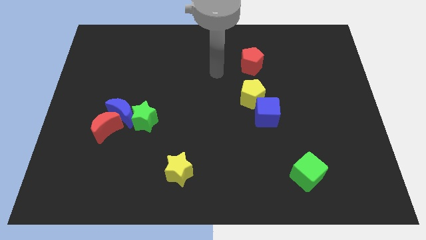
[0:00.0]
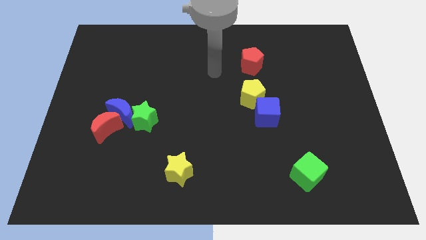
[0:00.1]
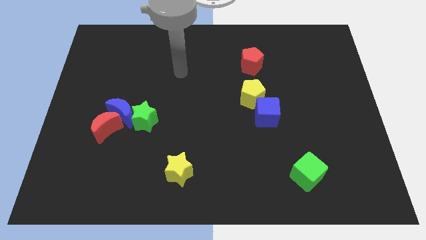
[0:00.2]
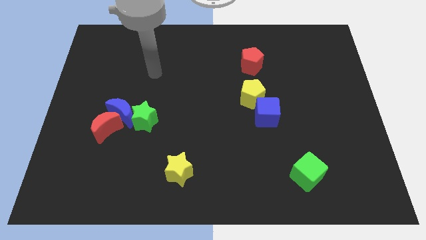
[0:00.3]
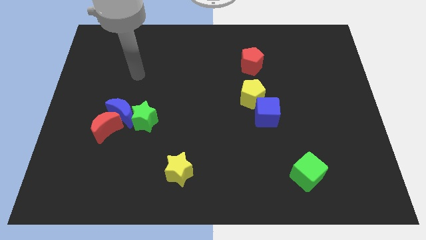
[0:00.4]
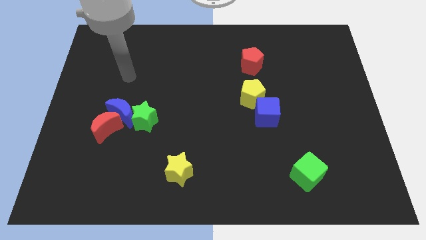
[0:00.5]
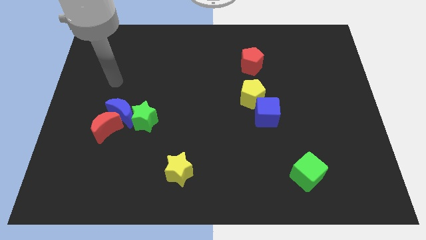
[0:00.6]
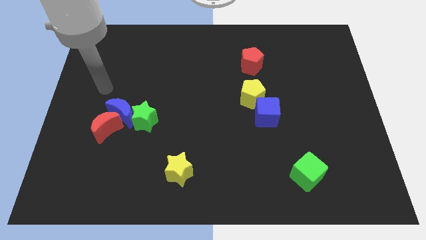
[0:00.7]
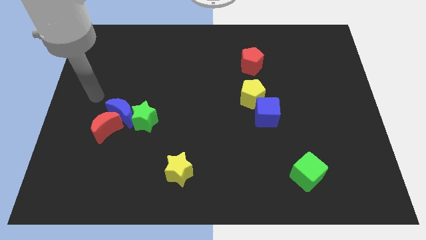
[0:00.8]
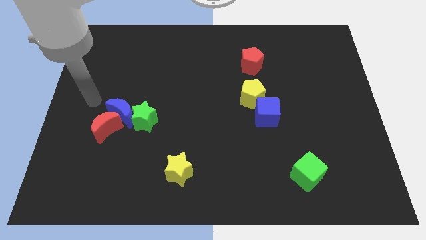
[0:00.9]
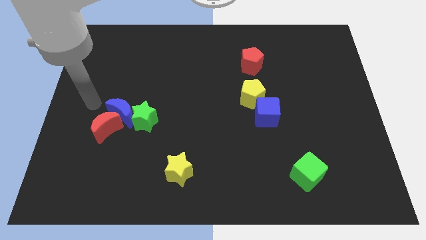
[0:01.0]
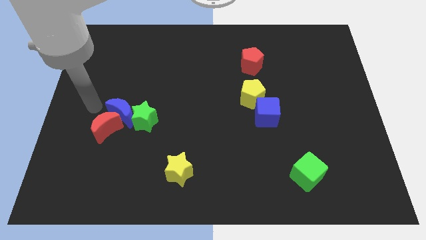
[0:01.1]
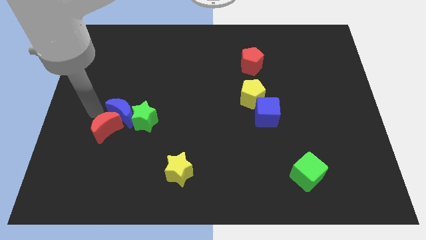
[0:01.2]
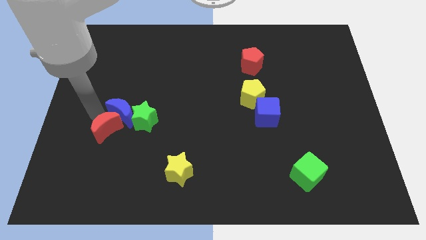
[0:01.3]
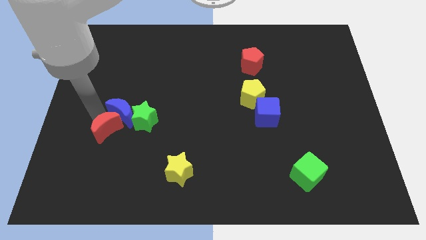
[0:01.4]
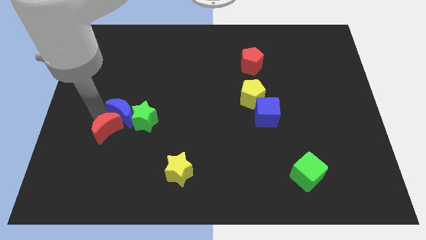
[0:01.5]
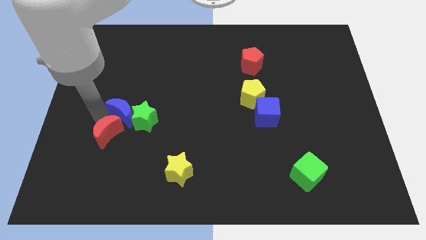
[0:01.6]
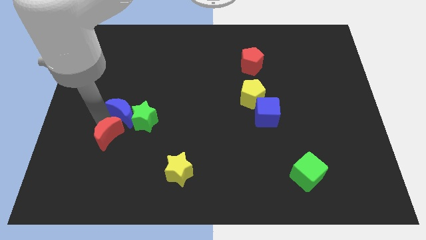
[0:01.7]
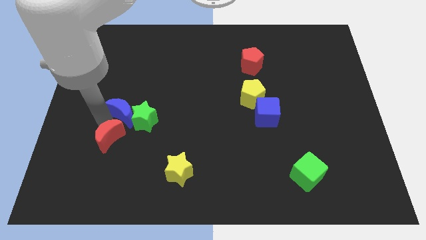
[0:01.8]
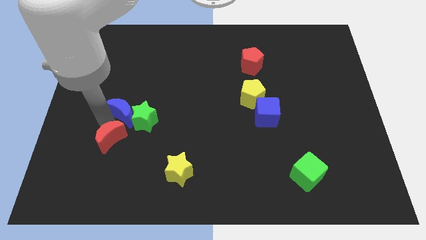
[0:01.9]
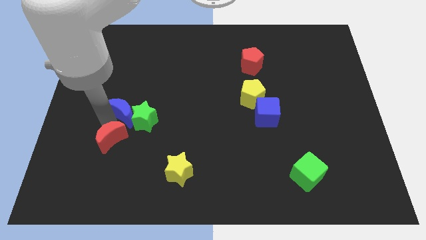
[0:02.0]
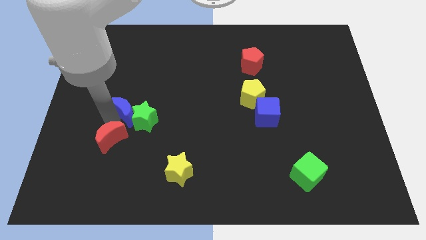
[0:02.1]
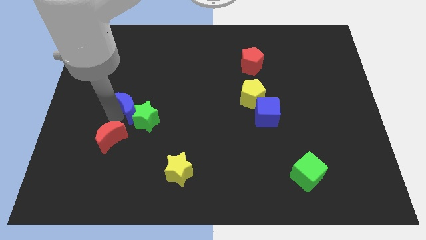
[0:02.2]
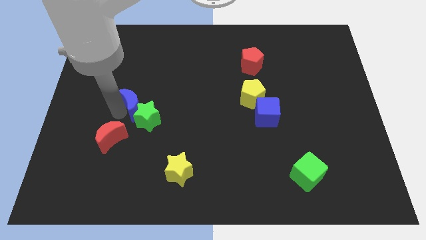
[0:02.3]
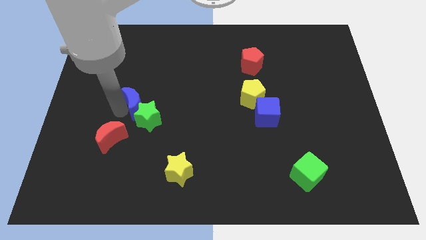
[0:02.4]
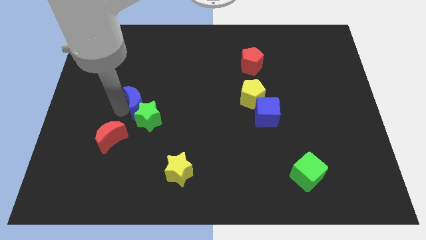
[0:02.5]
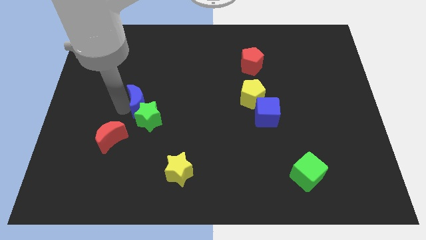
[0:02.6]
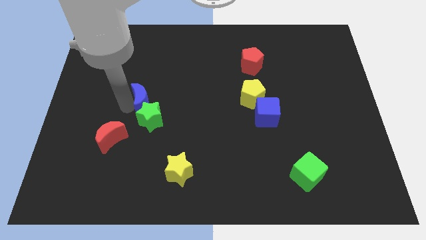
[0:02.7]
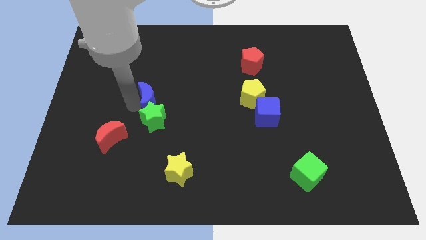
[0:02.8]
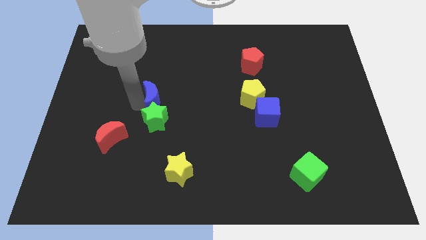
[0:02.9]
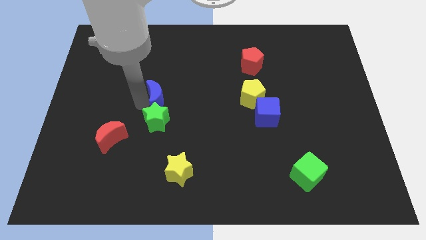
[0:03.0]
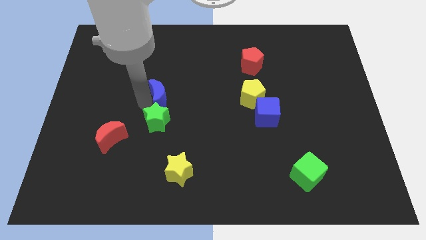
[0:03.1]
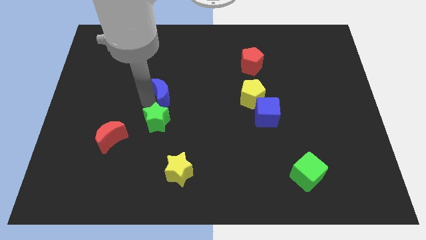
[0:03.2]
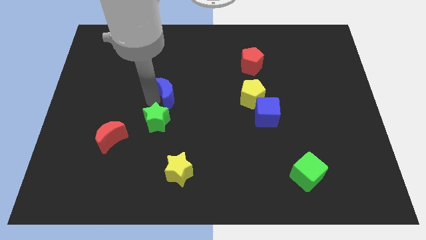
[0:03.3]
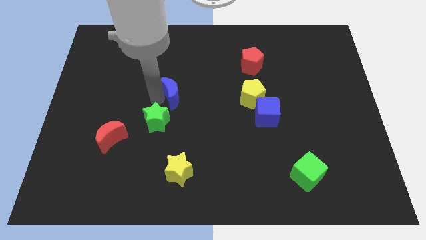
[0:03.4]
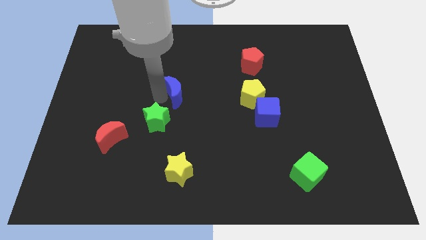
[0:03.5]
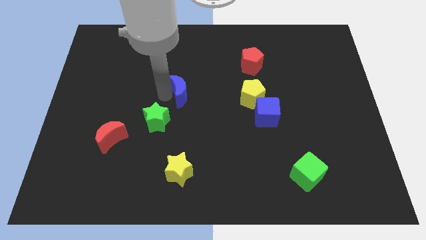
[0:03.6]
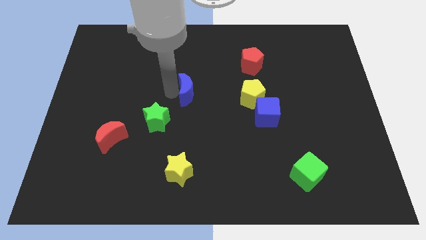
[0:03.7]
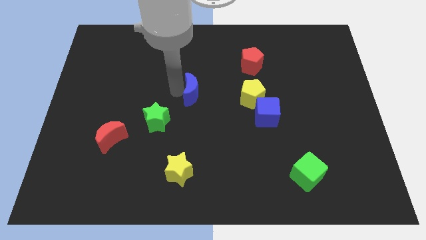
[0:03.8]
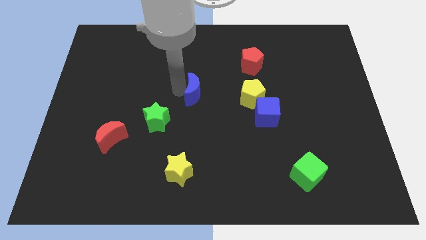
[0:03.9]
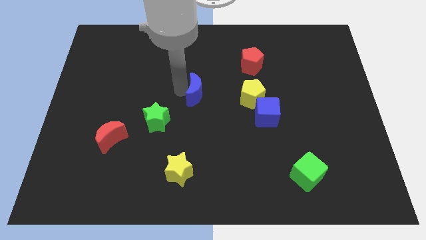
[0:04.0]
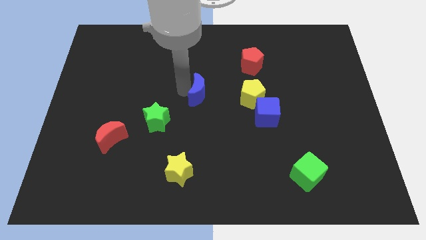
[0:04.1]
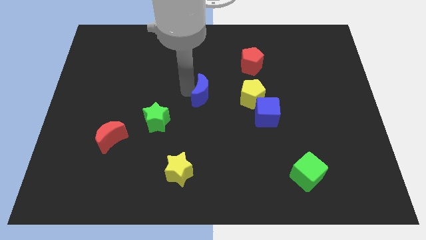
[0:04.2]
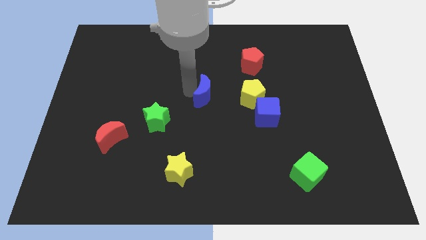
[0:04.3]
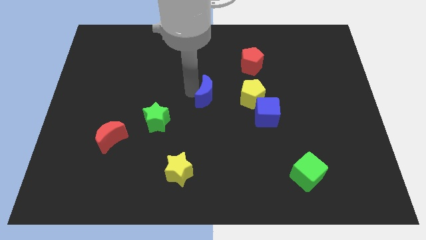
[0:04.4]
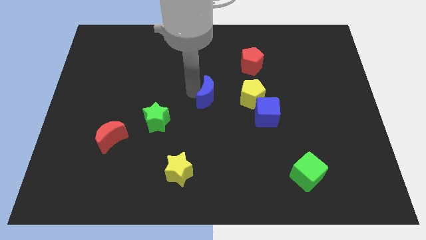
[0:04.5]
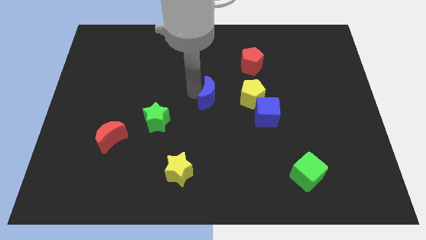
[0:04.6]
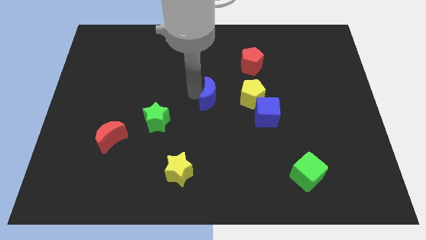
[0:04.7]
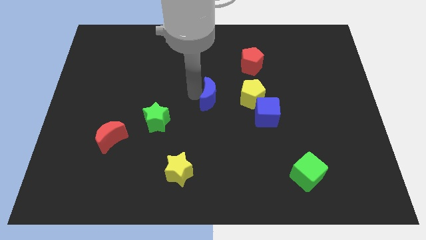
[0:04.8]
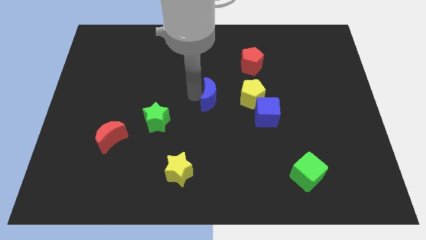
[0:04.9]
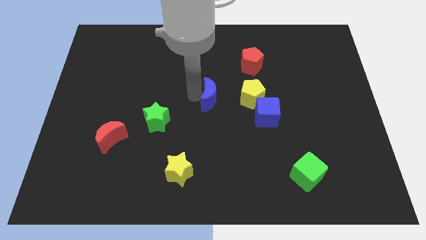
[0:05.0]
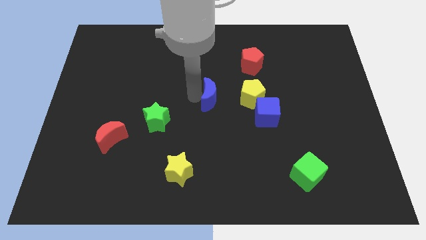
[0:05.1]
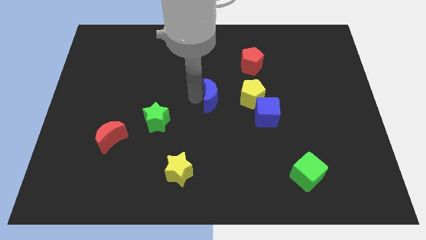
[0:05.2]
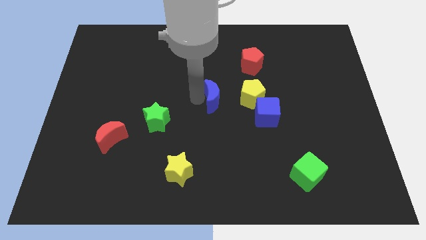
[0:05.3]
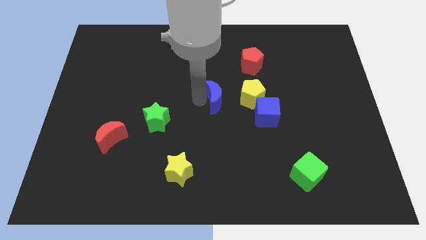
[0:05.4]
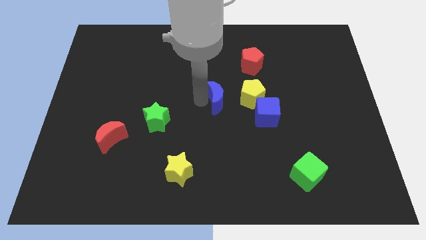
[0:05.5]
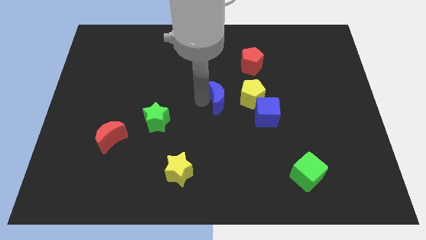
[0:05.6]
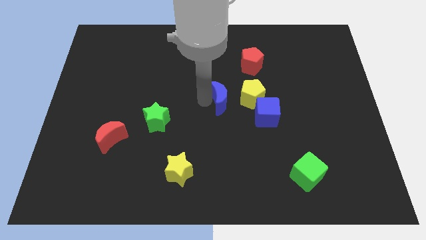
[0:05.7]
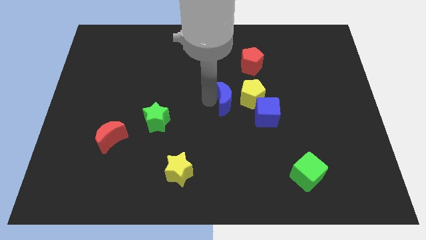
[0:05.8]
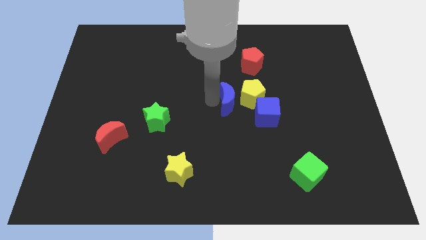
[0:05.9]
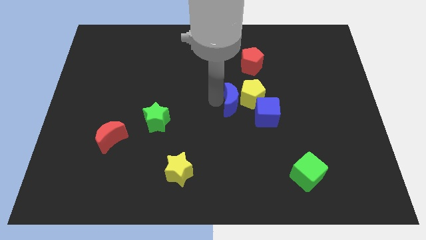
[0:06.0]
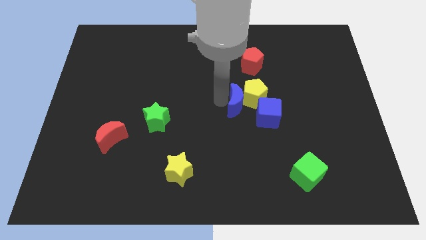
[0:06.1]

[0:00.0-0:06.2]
push the blue moon towards the yellow pentagon

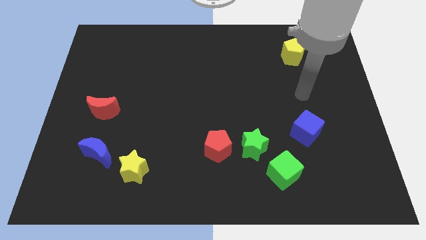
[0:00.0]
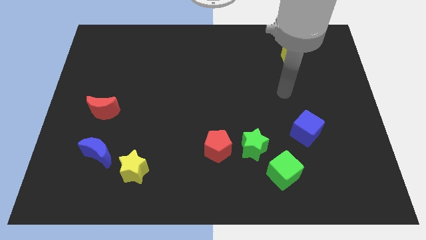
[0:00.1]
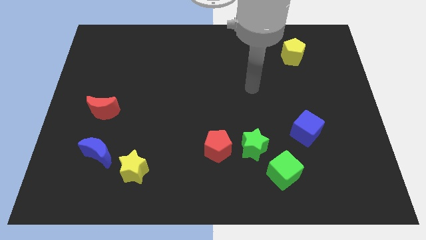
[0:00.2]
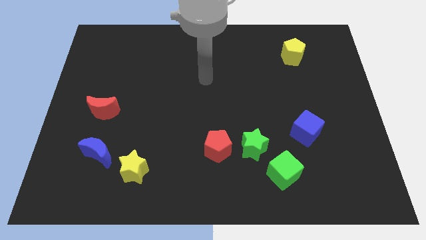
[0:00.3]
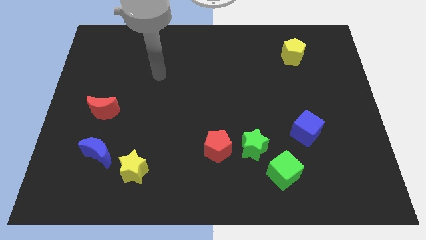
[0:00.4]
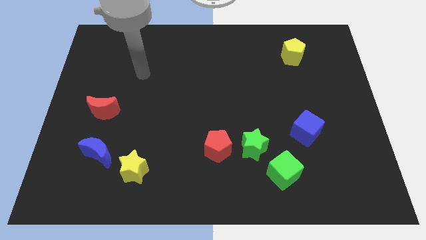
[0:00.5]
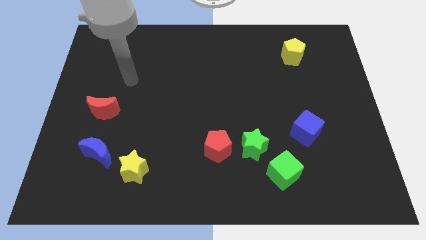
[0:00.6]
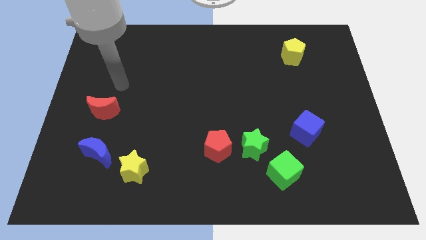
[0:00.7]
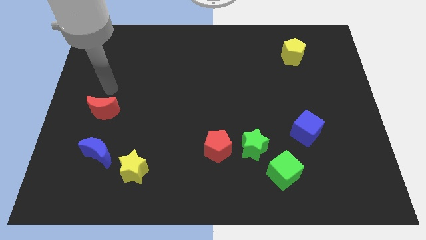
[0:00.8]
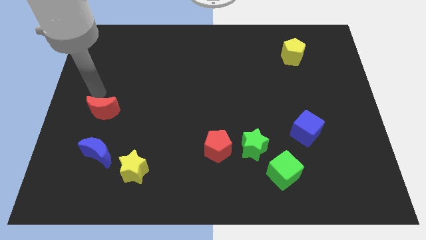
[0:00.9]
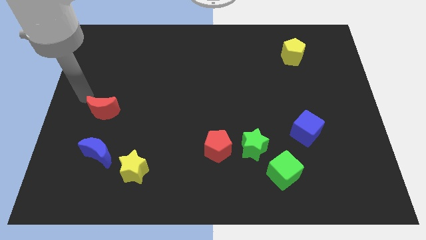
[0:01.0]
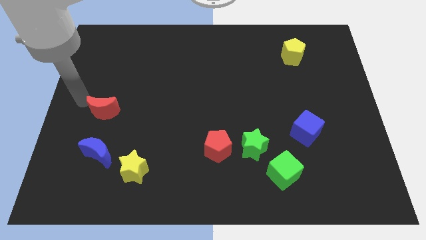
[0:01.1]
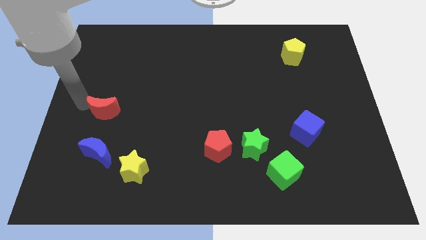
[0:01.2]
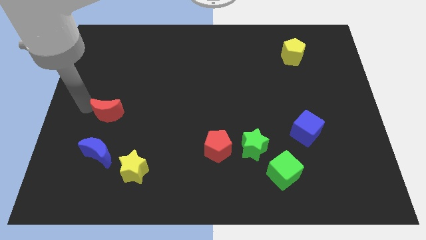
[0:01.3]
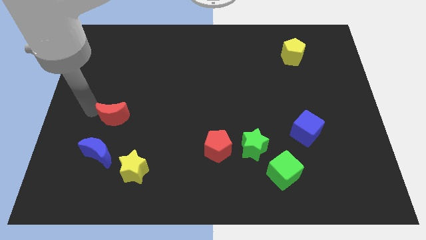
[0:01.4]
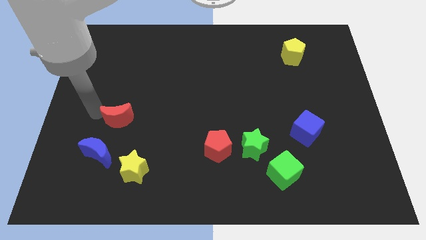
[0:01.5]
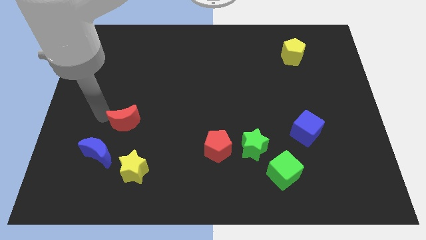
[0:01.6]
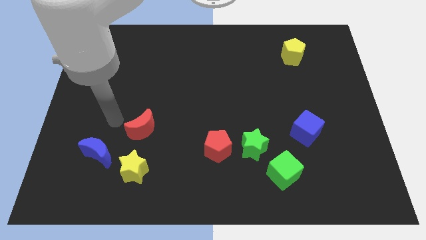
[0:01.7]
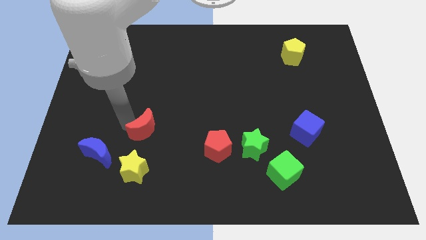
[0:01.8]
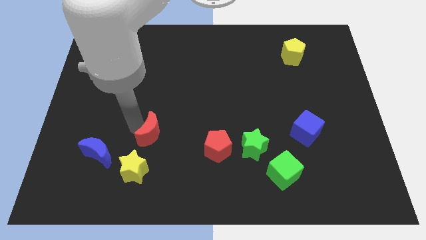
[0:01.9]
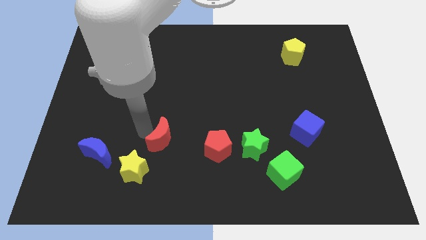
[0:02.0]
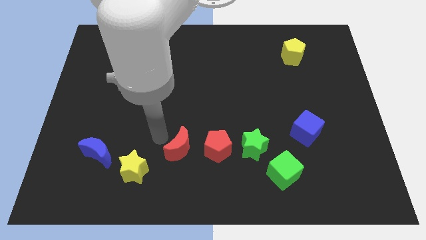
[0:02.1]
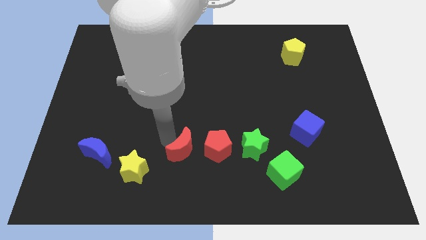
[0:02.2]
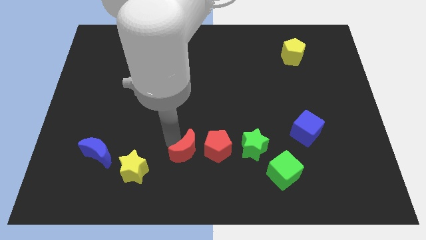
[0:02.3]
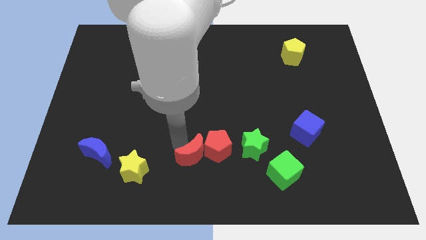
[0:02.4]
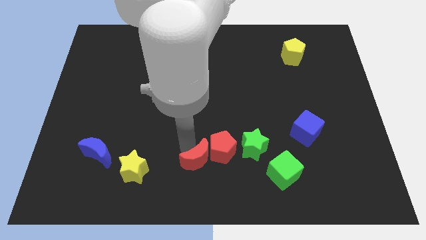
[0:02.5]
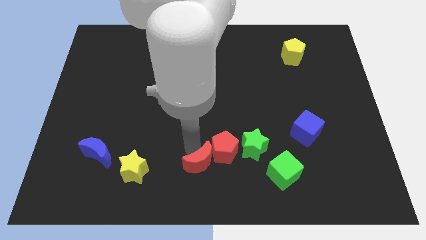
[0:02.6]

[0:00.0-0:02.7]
slide the red moon to the red pentagon
